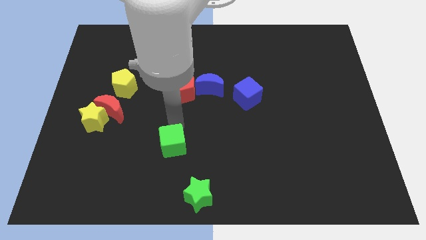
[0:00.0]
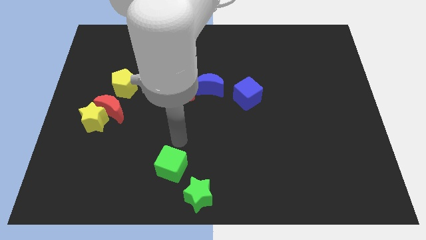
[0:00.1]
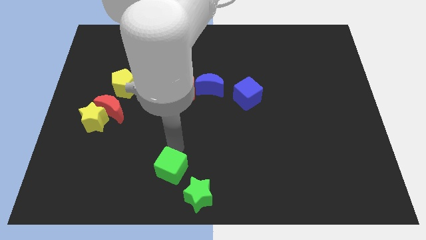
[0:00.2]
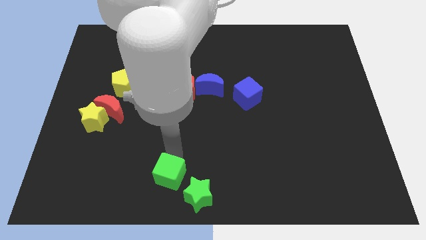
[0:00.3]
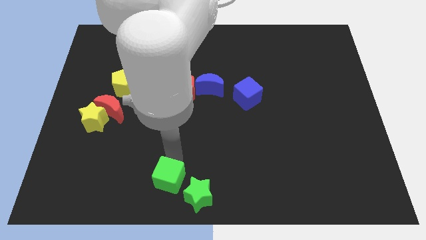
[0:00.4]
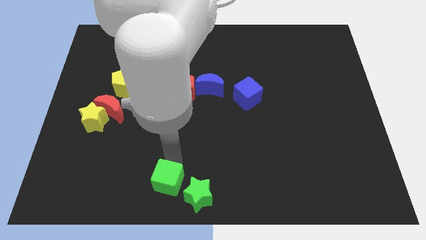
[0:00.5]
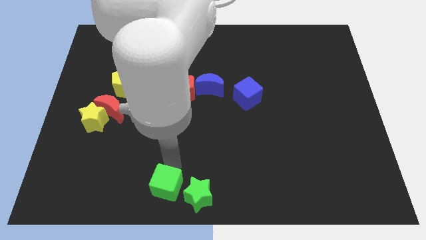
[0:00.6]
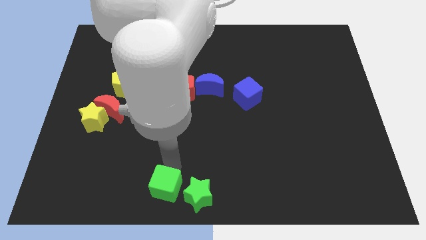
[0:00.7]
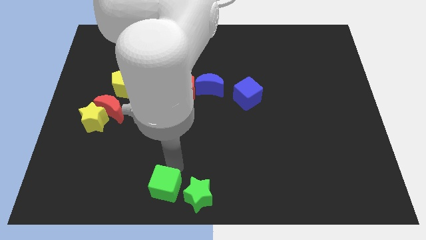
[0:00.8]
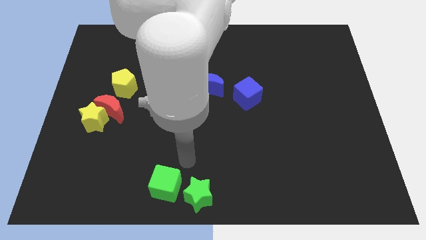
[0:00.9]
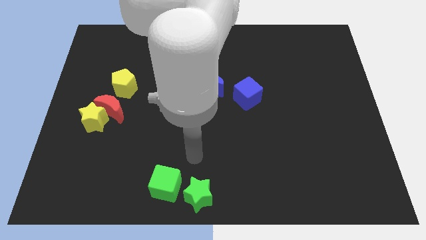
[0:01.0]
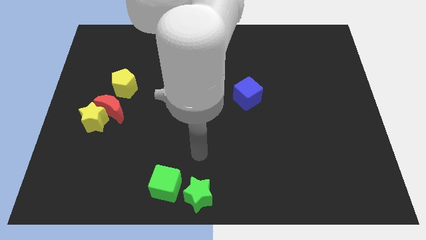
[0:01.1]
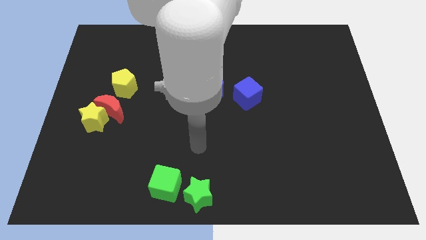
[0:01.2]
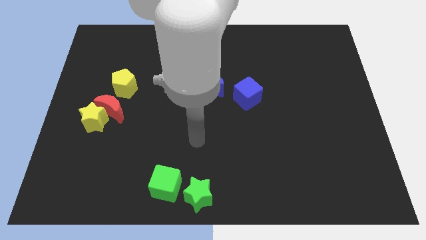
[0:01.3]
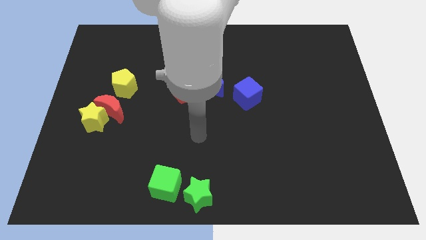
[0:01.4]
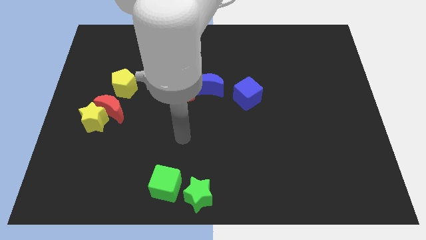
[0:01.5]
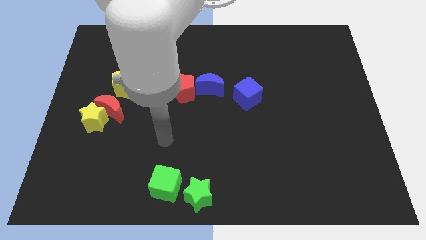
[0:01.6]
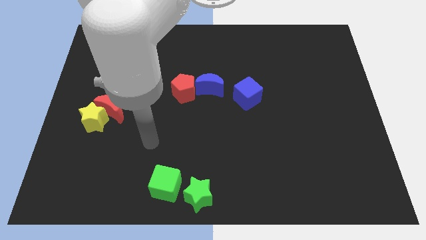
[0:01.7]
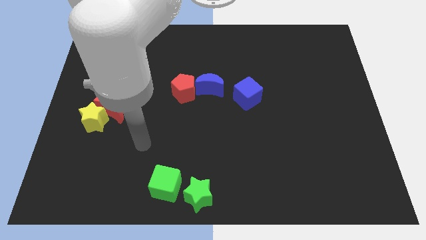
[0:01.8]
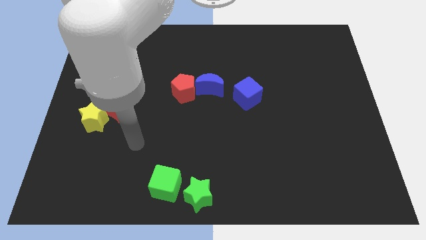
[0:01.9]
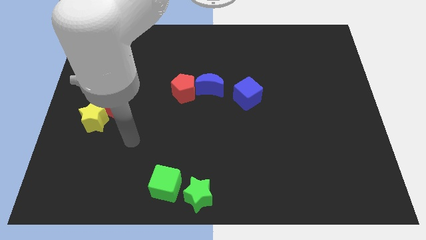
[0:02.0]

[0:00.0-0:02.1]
place the green cube to the left of the green star

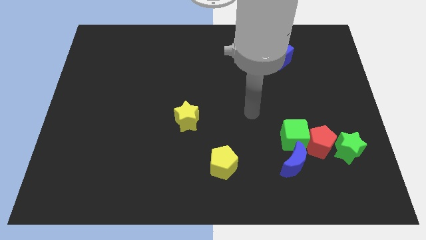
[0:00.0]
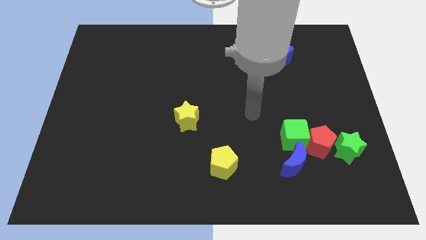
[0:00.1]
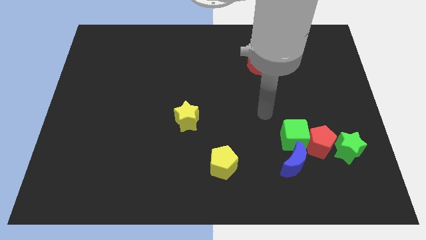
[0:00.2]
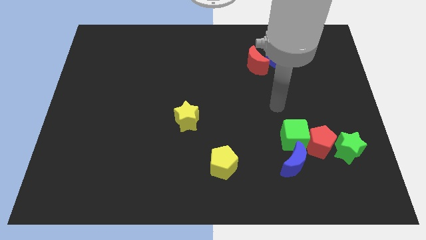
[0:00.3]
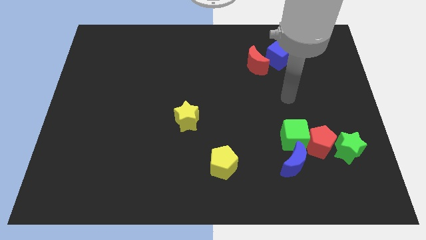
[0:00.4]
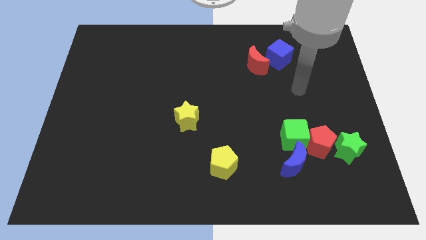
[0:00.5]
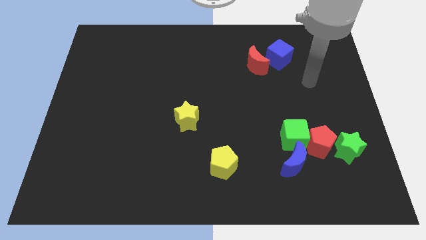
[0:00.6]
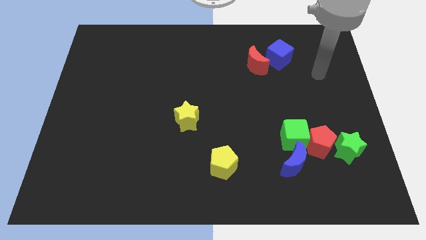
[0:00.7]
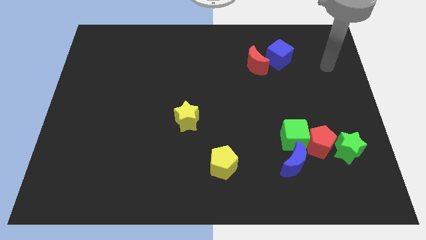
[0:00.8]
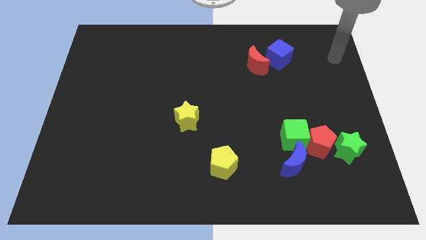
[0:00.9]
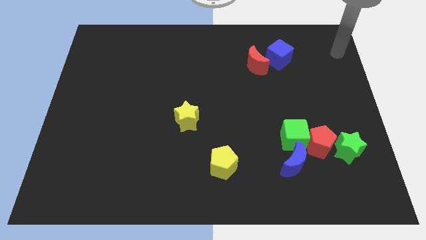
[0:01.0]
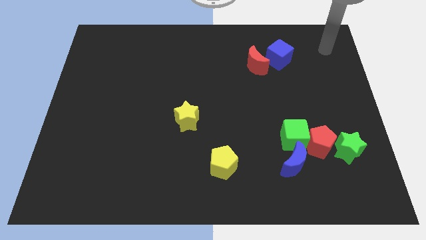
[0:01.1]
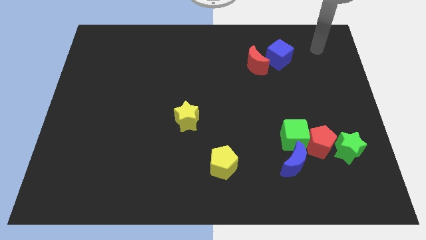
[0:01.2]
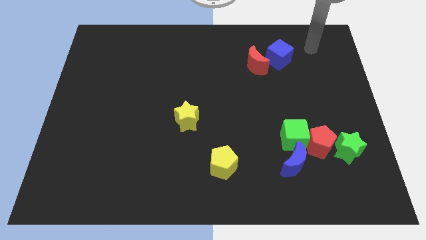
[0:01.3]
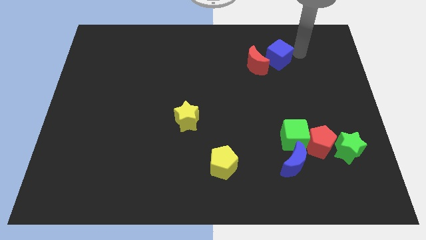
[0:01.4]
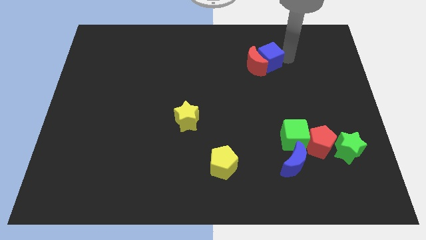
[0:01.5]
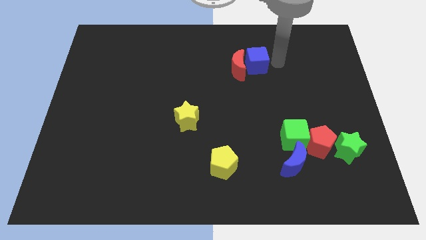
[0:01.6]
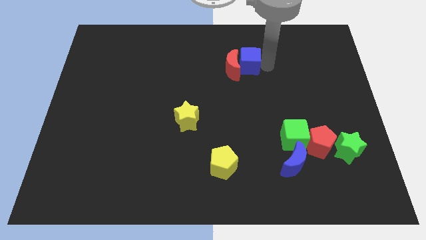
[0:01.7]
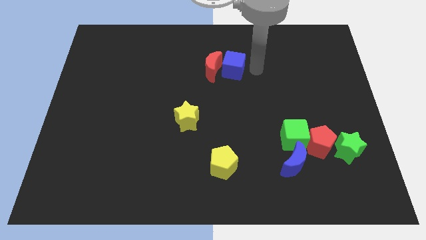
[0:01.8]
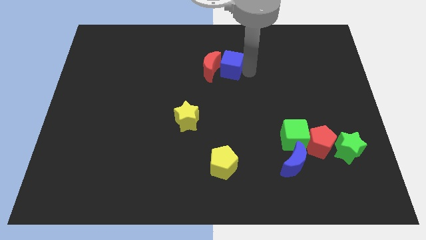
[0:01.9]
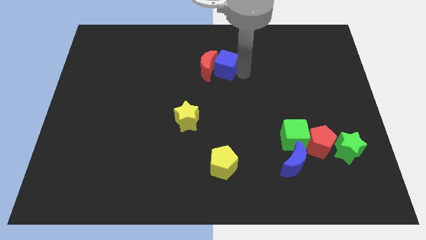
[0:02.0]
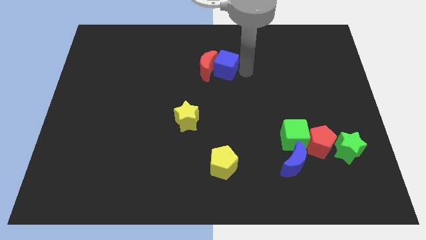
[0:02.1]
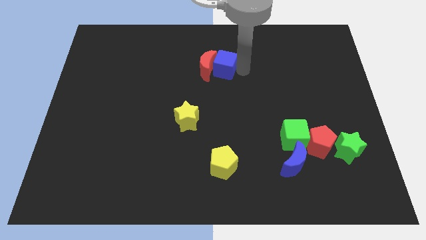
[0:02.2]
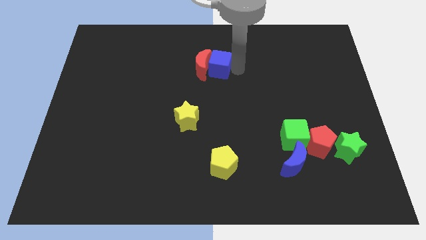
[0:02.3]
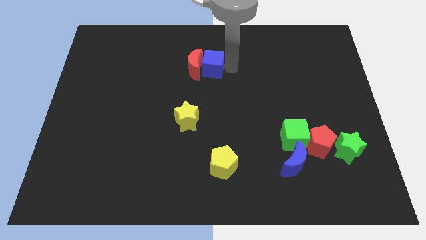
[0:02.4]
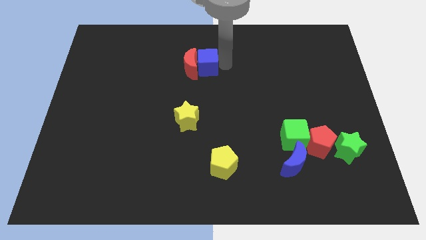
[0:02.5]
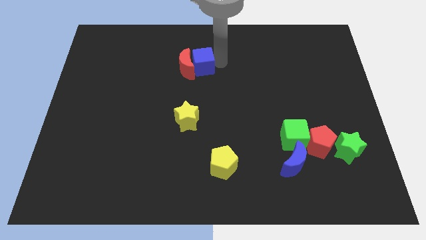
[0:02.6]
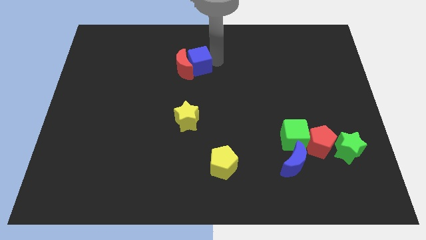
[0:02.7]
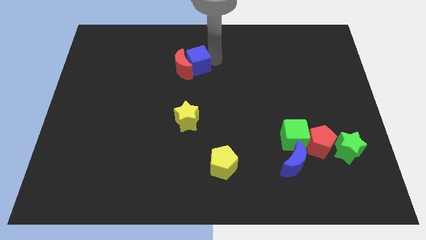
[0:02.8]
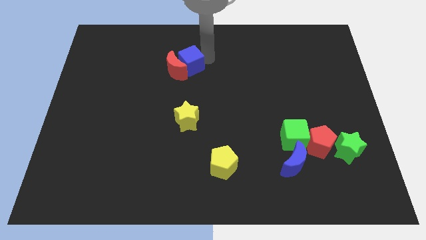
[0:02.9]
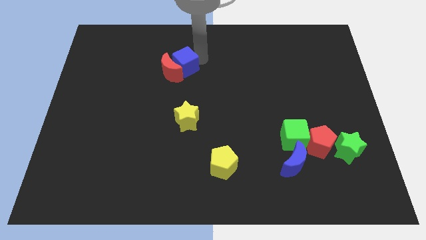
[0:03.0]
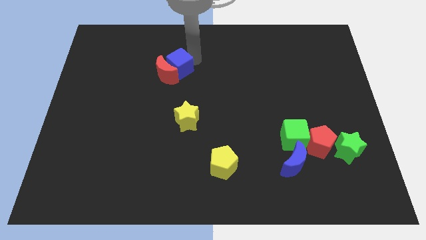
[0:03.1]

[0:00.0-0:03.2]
move the blue cube and the red moon towards left

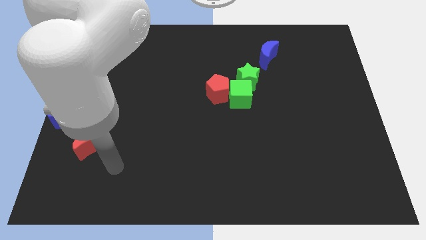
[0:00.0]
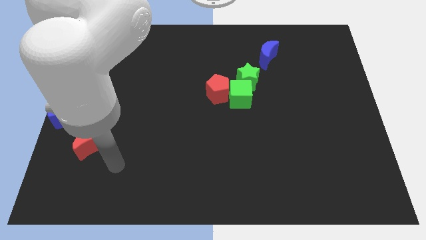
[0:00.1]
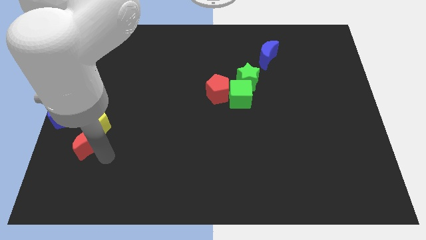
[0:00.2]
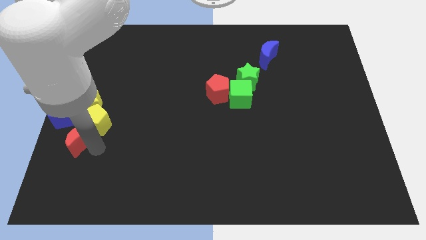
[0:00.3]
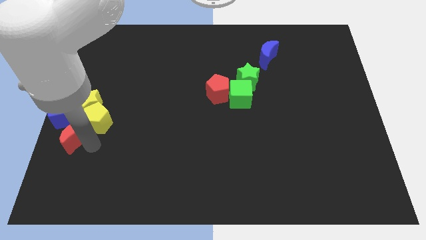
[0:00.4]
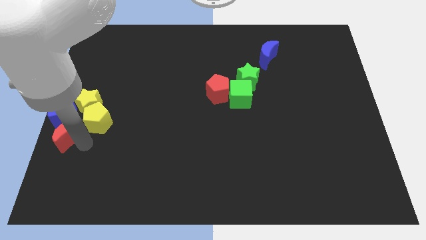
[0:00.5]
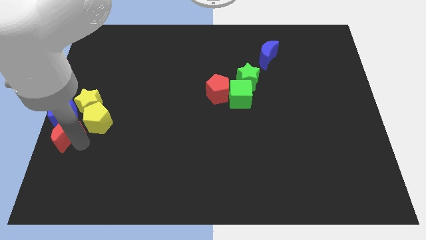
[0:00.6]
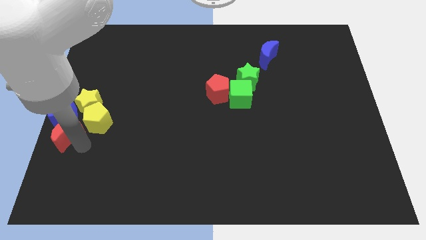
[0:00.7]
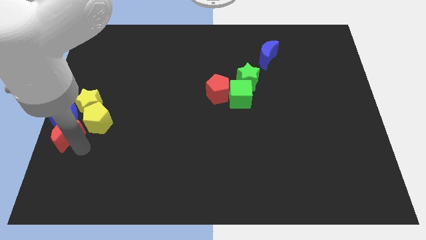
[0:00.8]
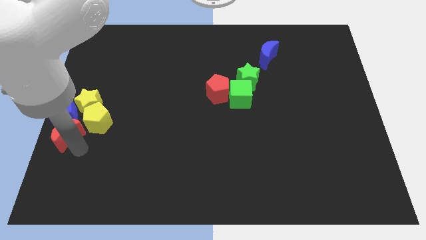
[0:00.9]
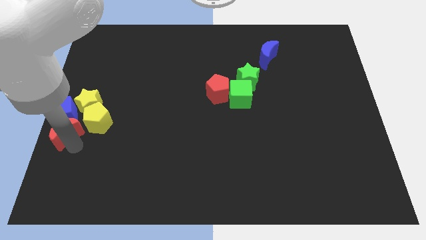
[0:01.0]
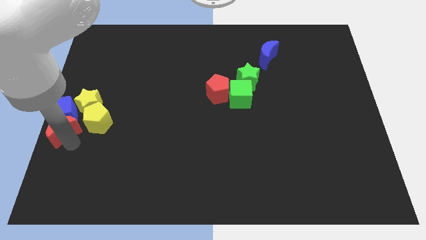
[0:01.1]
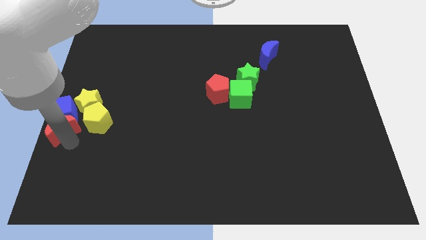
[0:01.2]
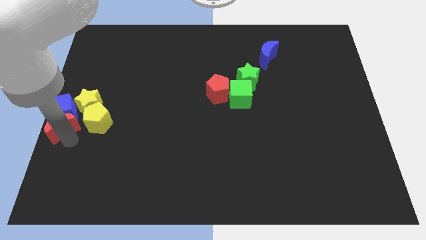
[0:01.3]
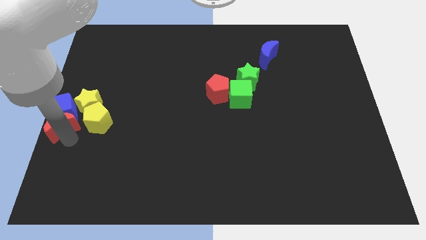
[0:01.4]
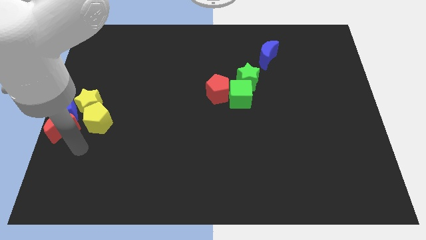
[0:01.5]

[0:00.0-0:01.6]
move the red crescent into the bottom of the blue cube

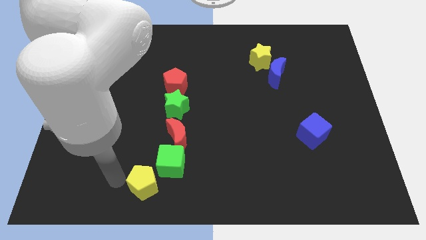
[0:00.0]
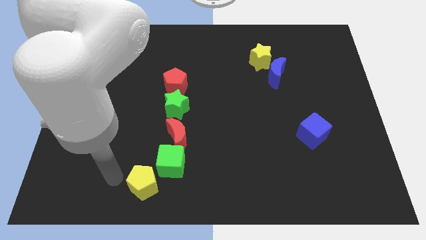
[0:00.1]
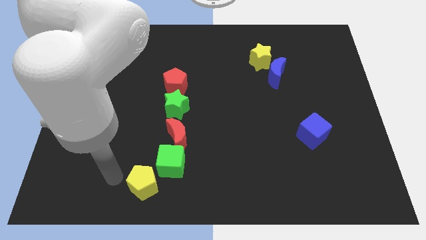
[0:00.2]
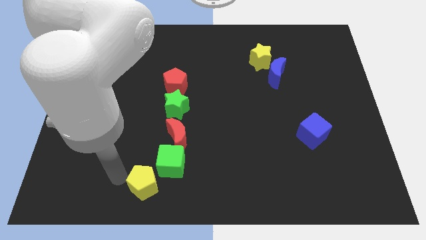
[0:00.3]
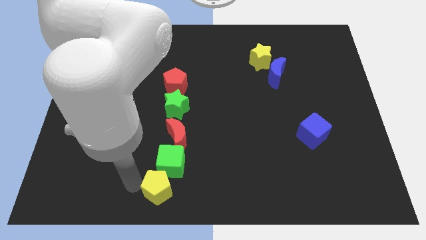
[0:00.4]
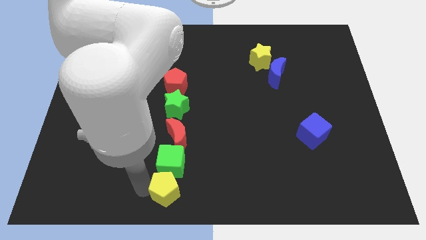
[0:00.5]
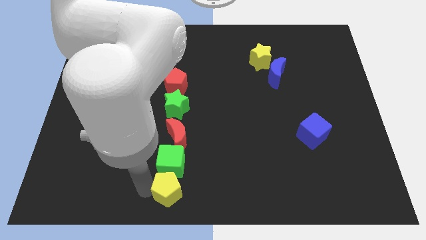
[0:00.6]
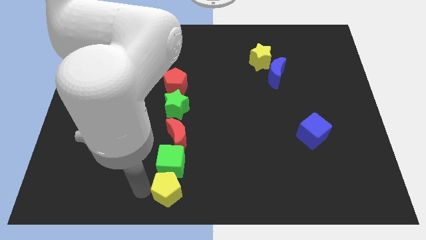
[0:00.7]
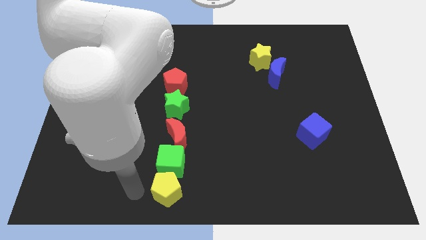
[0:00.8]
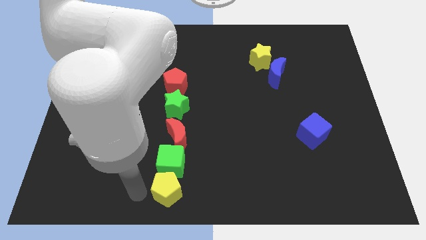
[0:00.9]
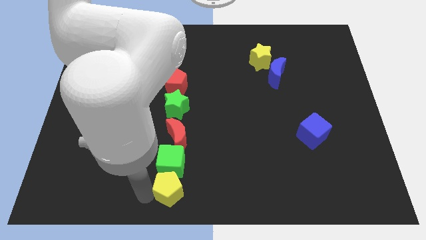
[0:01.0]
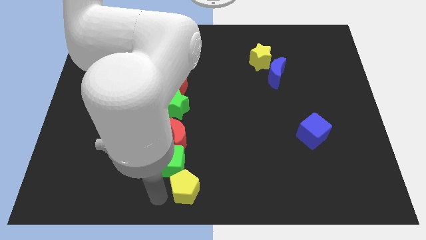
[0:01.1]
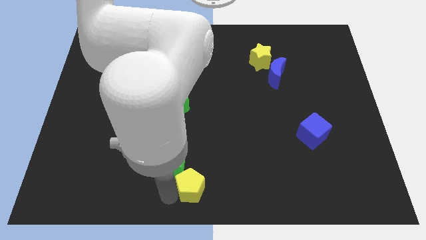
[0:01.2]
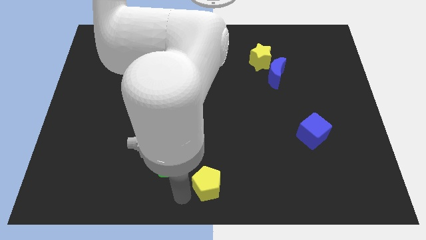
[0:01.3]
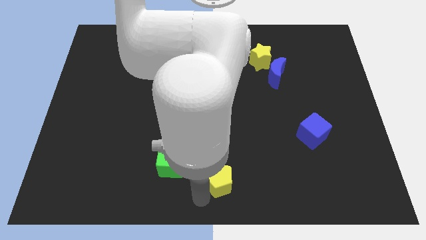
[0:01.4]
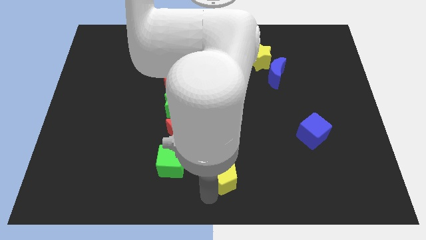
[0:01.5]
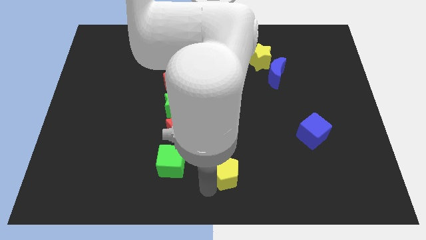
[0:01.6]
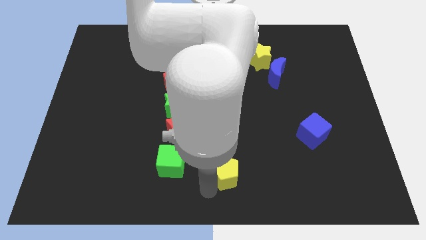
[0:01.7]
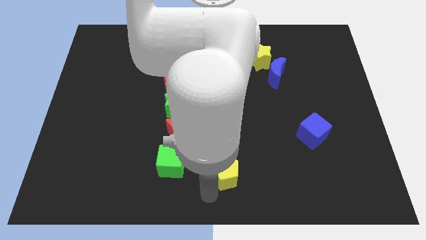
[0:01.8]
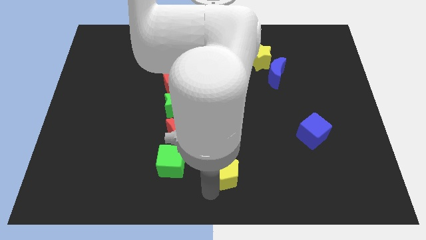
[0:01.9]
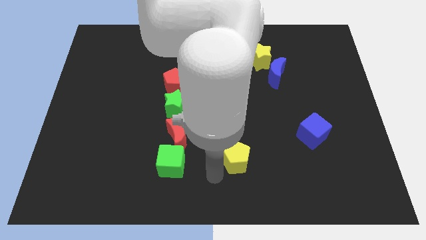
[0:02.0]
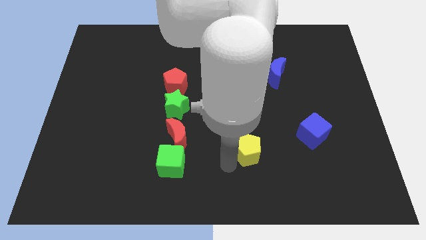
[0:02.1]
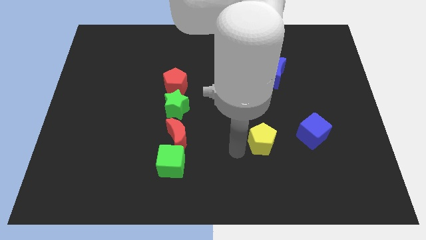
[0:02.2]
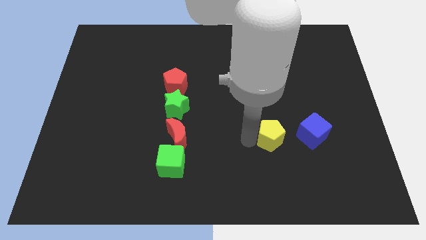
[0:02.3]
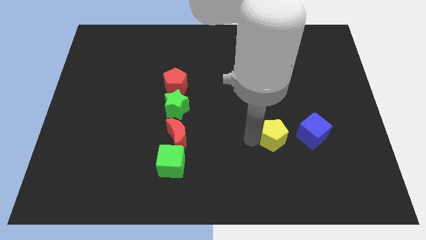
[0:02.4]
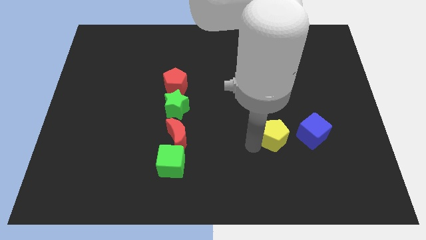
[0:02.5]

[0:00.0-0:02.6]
place the yellow pentagon to the left of blue cube
